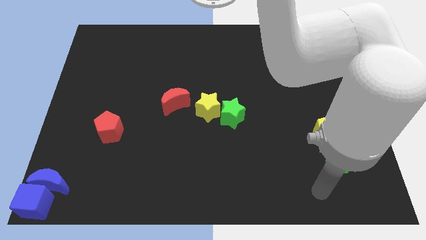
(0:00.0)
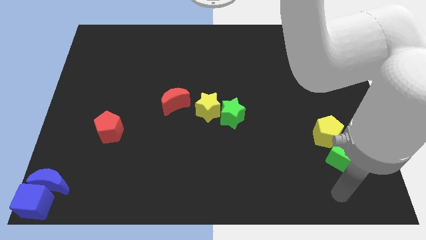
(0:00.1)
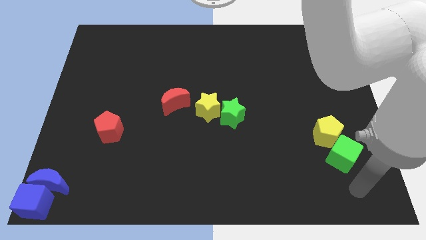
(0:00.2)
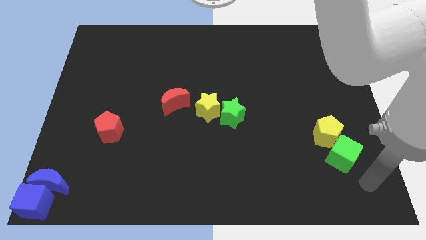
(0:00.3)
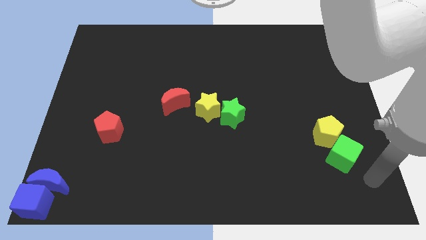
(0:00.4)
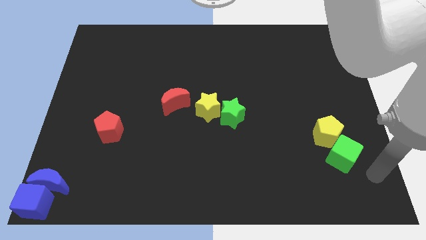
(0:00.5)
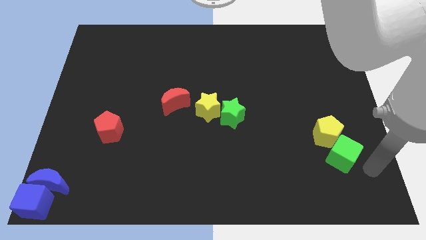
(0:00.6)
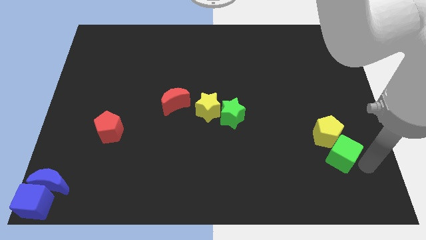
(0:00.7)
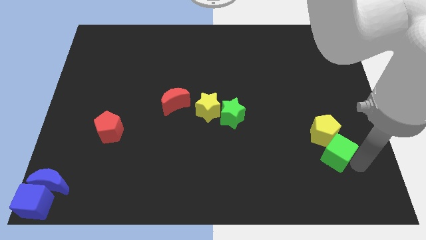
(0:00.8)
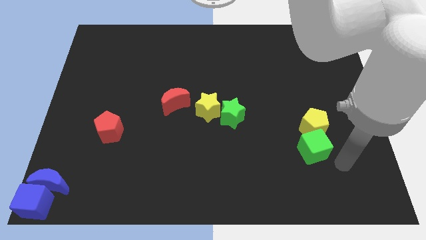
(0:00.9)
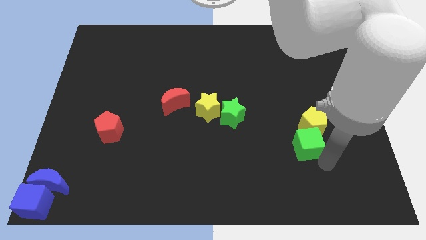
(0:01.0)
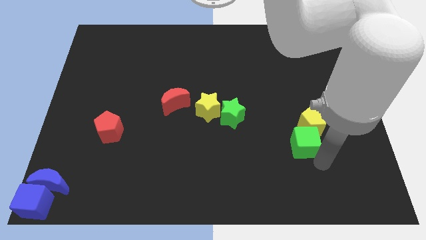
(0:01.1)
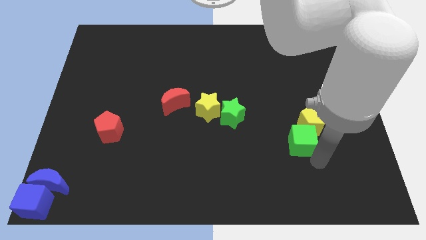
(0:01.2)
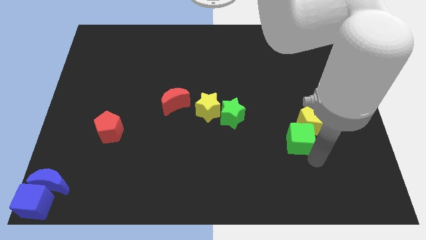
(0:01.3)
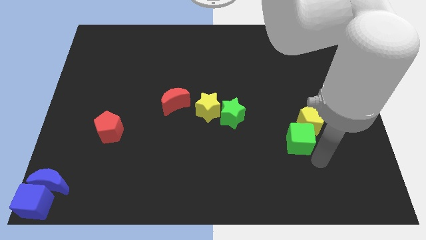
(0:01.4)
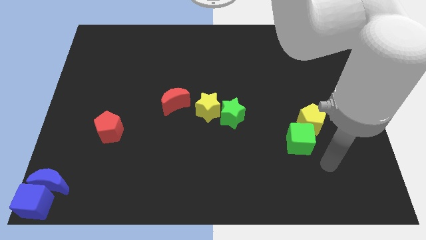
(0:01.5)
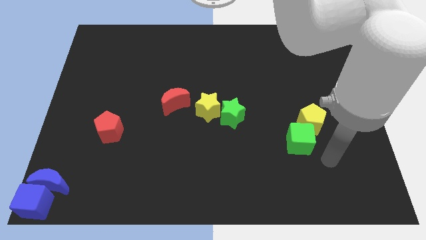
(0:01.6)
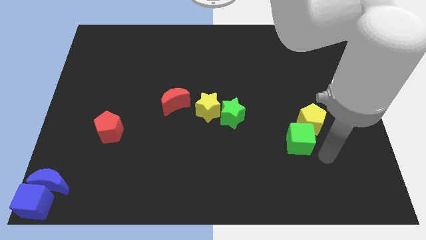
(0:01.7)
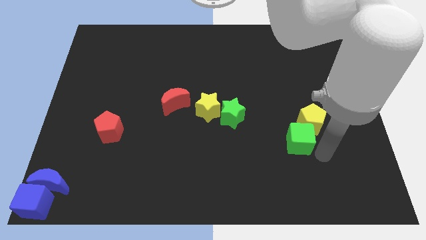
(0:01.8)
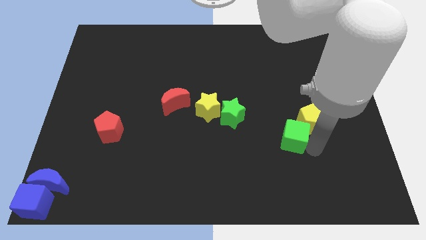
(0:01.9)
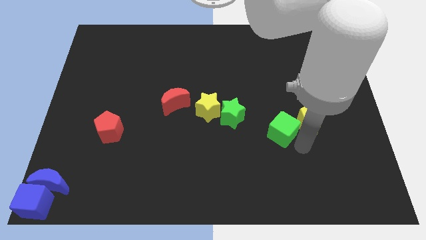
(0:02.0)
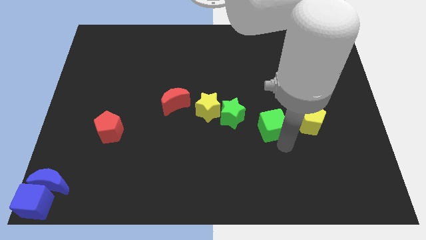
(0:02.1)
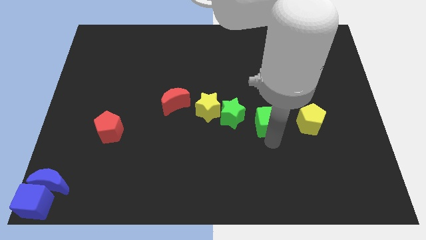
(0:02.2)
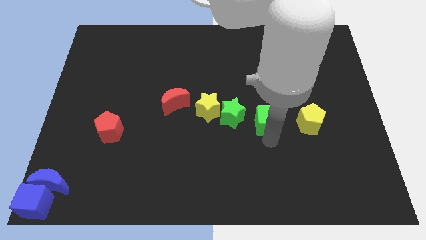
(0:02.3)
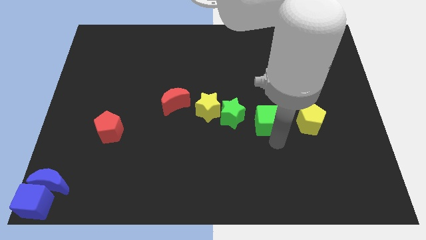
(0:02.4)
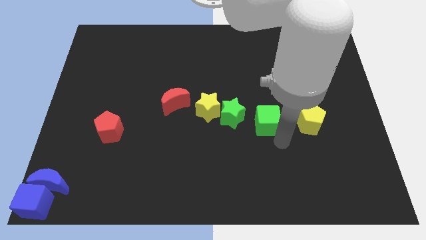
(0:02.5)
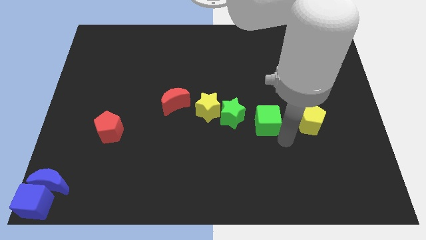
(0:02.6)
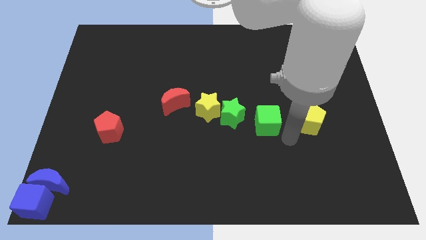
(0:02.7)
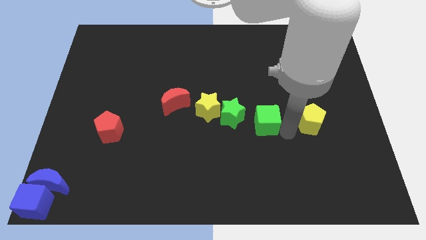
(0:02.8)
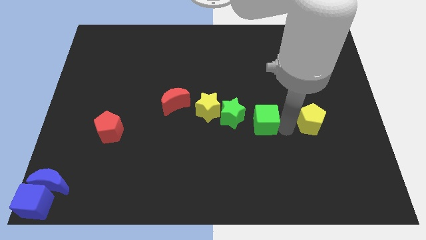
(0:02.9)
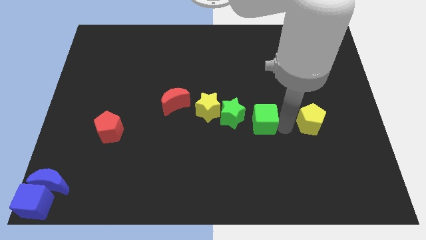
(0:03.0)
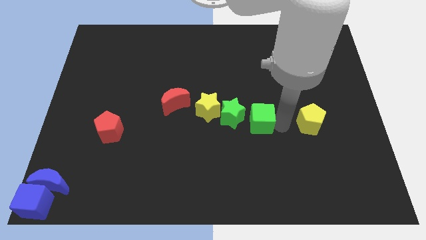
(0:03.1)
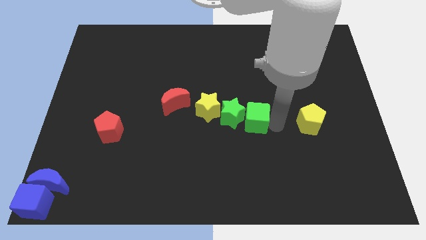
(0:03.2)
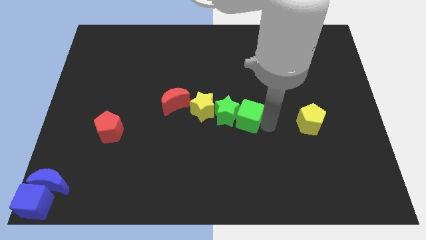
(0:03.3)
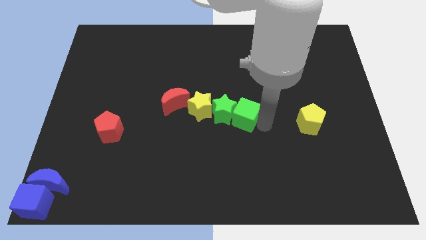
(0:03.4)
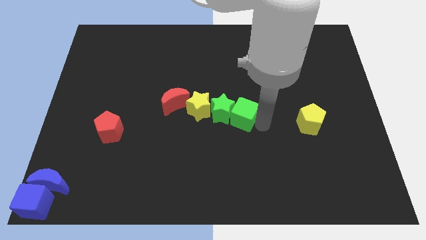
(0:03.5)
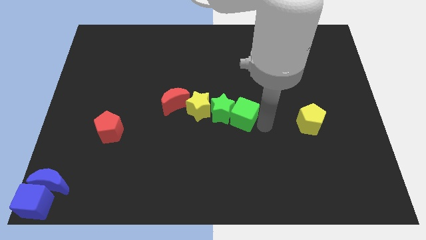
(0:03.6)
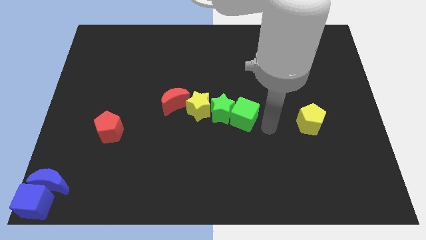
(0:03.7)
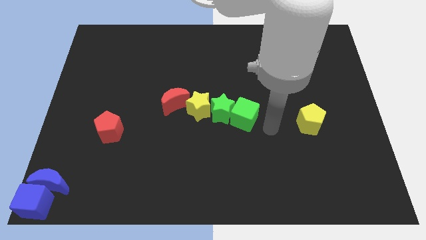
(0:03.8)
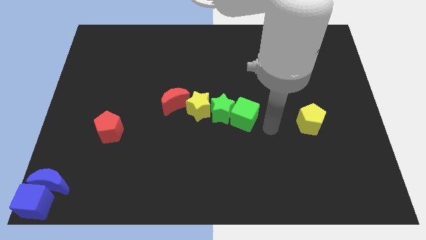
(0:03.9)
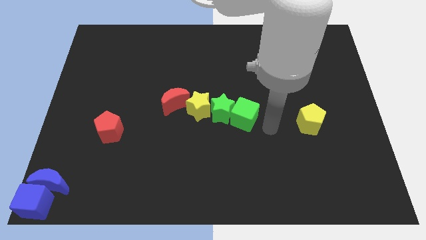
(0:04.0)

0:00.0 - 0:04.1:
push the green cube into the green star

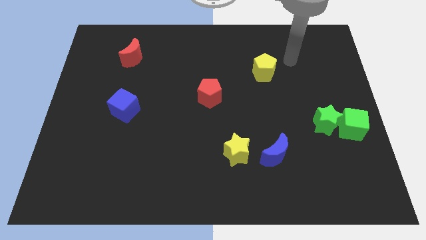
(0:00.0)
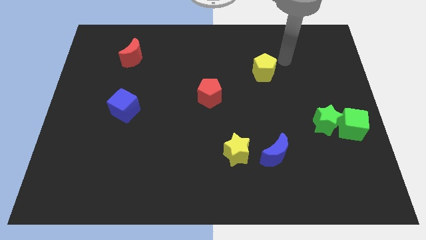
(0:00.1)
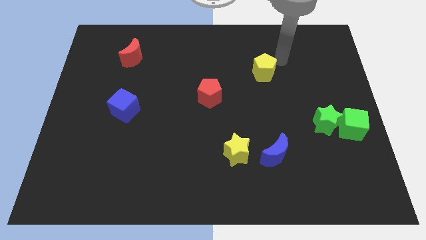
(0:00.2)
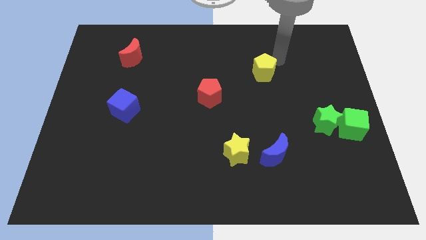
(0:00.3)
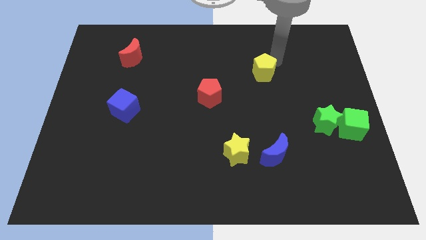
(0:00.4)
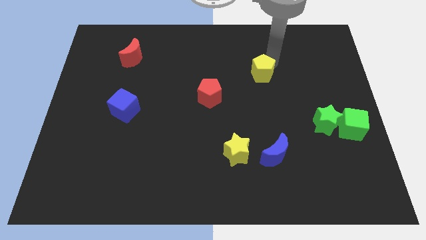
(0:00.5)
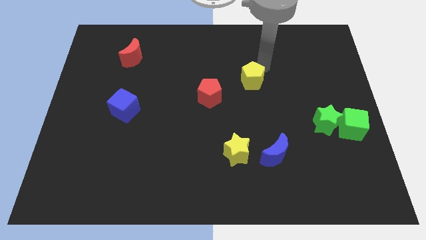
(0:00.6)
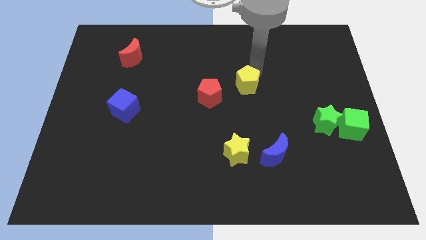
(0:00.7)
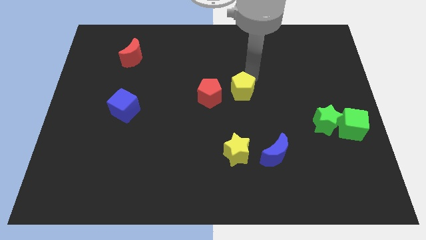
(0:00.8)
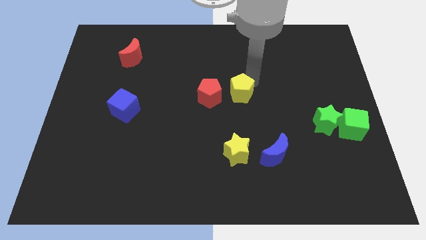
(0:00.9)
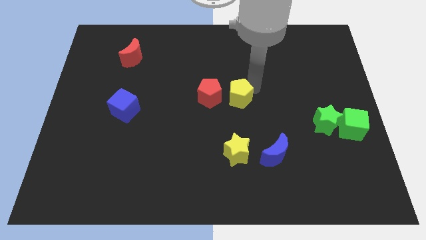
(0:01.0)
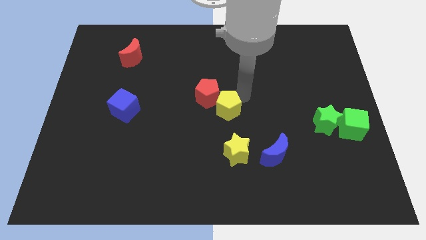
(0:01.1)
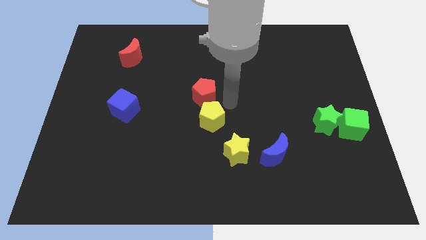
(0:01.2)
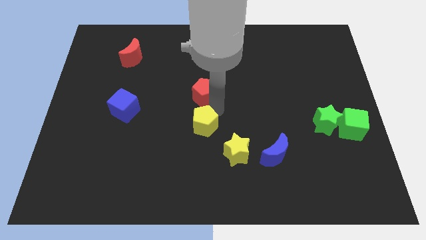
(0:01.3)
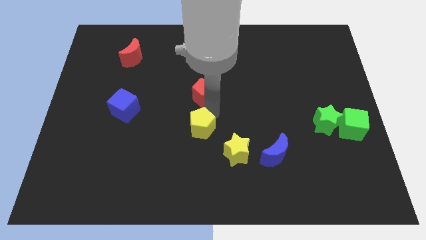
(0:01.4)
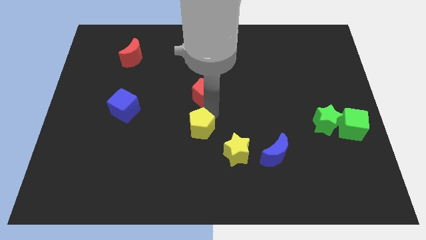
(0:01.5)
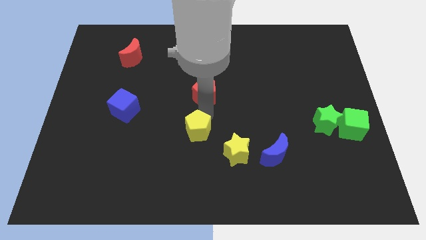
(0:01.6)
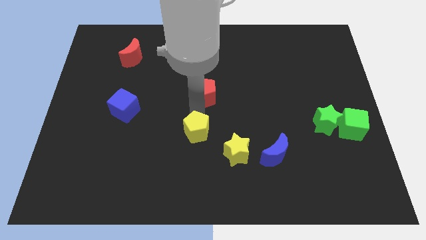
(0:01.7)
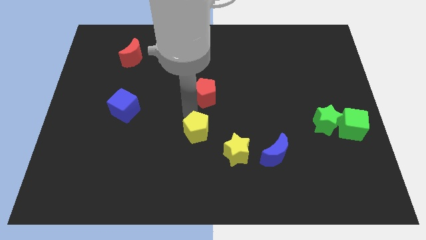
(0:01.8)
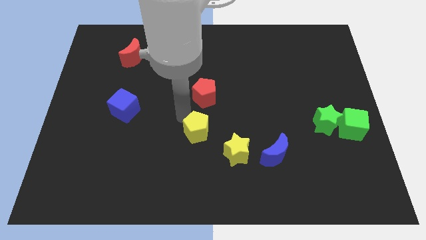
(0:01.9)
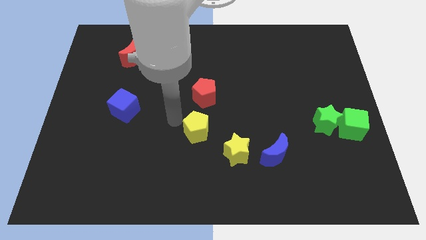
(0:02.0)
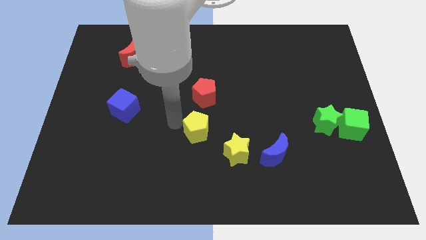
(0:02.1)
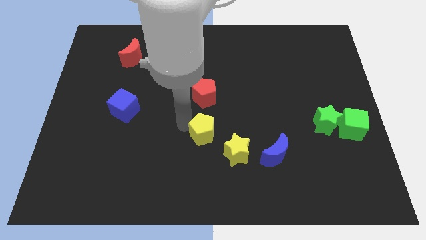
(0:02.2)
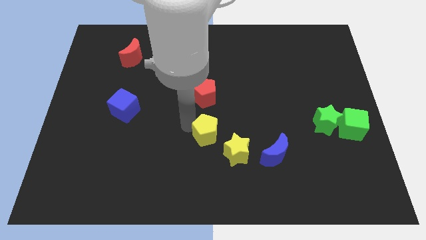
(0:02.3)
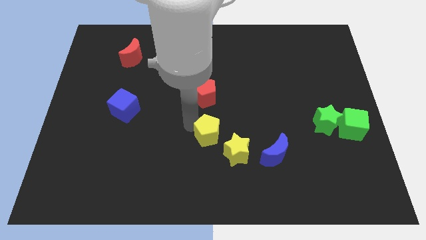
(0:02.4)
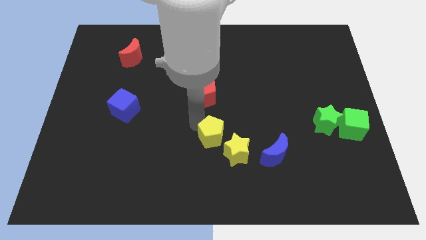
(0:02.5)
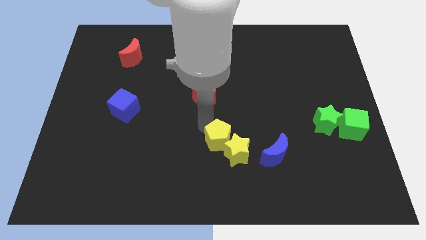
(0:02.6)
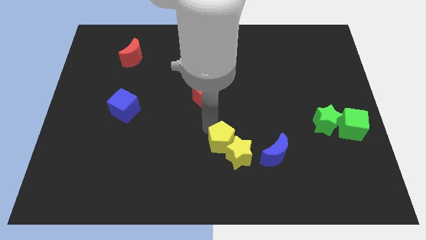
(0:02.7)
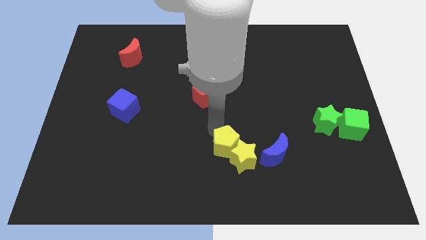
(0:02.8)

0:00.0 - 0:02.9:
push the yellow pentagon into the yellow star

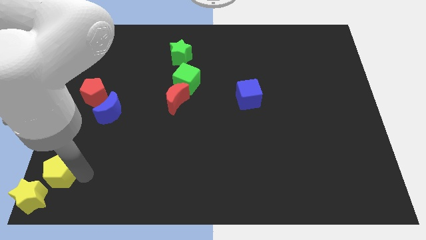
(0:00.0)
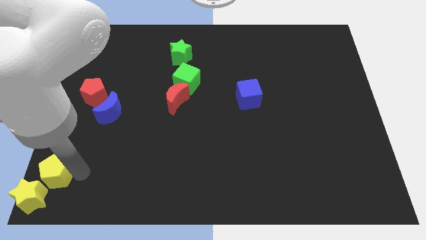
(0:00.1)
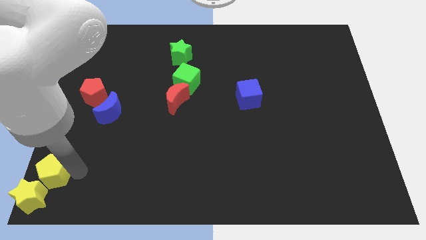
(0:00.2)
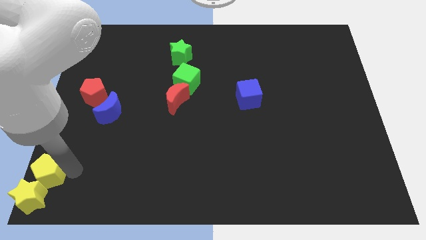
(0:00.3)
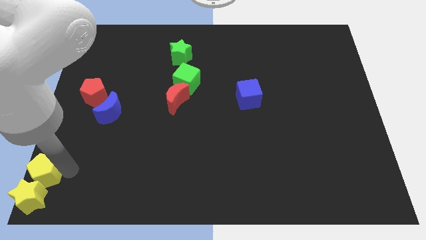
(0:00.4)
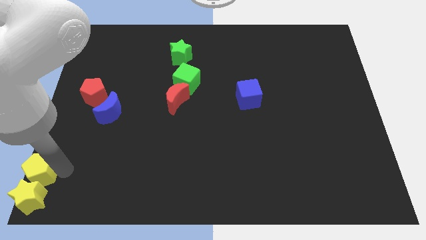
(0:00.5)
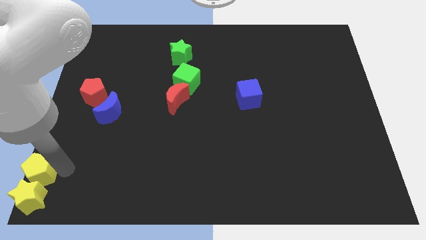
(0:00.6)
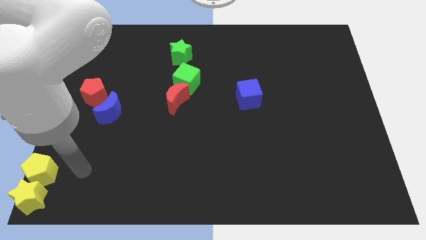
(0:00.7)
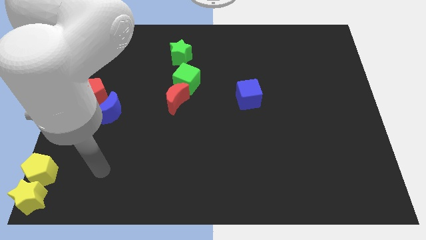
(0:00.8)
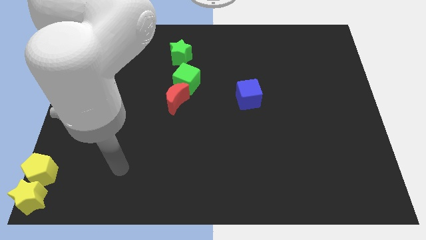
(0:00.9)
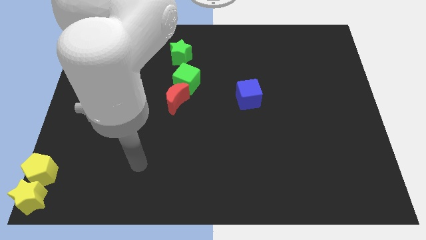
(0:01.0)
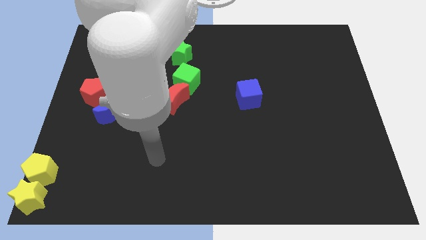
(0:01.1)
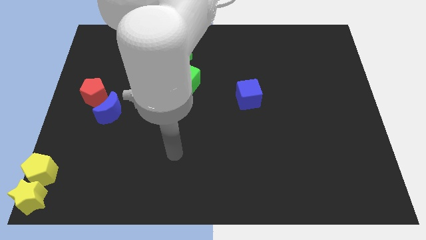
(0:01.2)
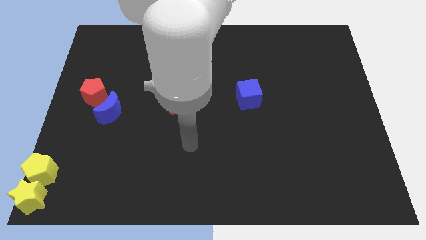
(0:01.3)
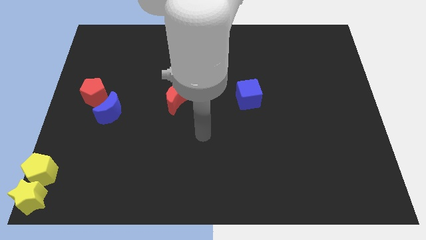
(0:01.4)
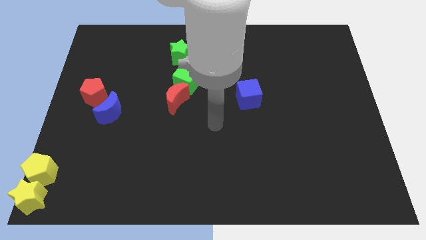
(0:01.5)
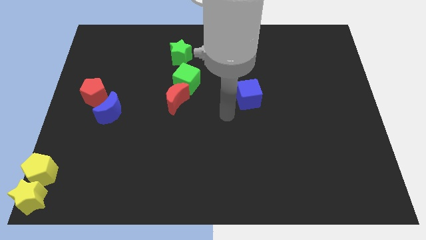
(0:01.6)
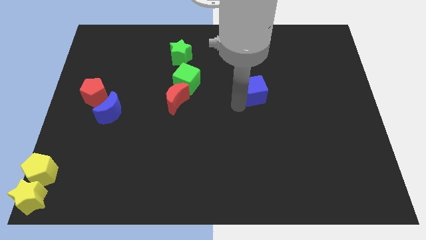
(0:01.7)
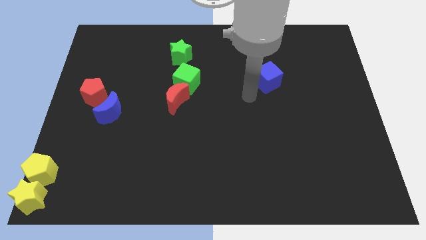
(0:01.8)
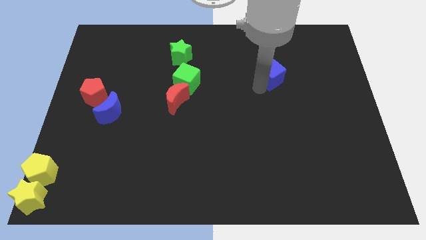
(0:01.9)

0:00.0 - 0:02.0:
push the yellow pentagon into yellow star
